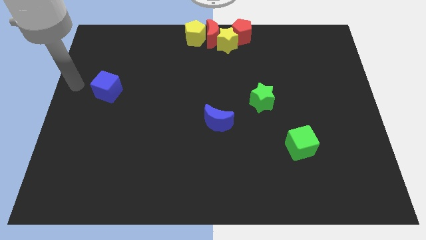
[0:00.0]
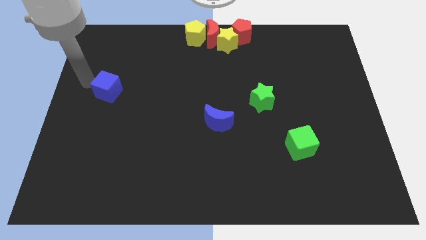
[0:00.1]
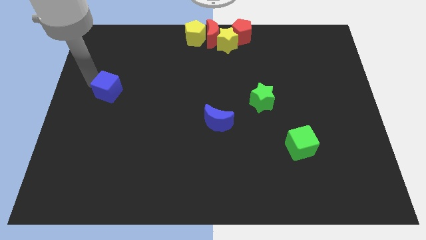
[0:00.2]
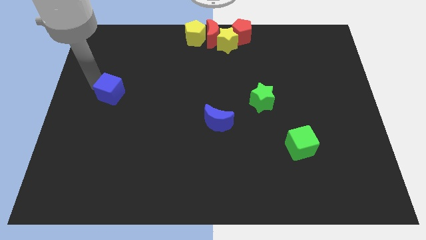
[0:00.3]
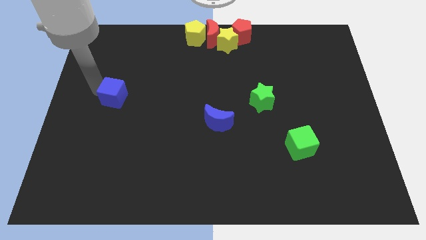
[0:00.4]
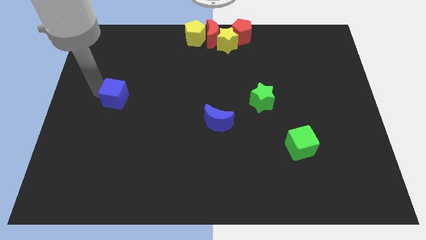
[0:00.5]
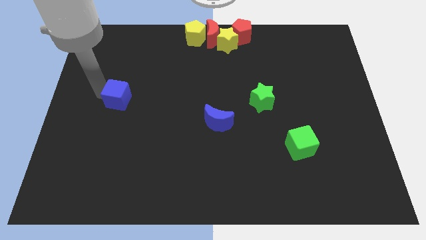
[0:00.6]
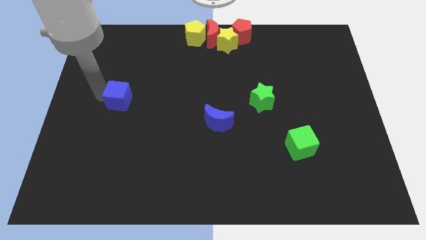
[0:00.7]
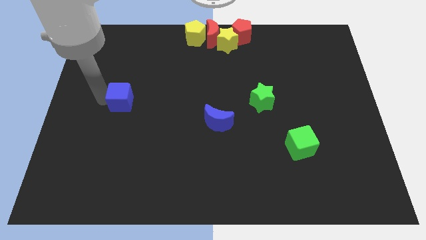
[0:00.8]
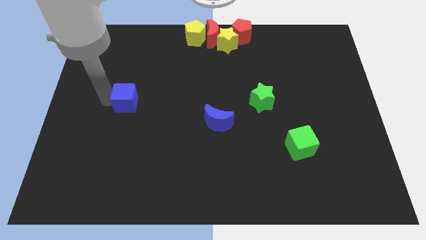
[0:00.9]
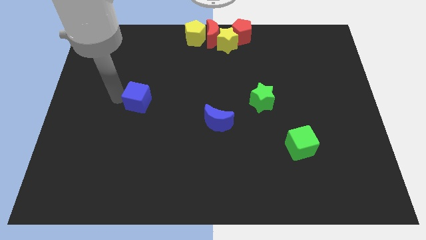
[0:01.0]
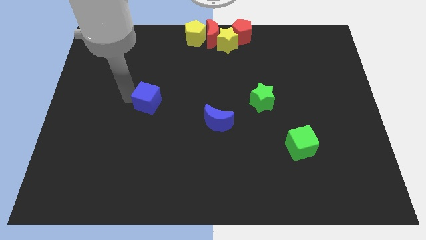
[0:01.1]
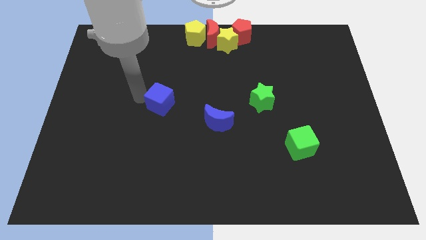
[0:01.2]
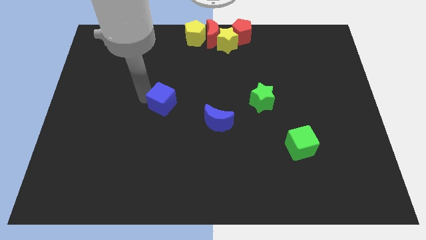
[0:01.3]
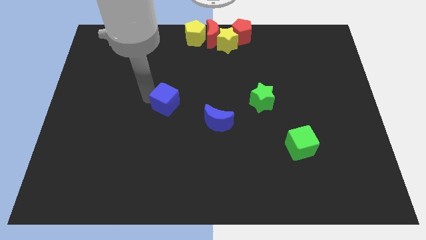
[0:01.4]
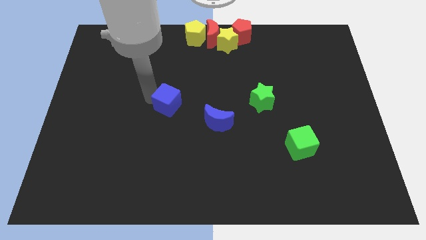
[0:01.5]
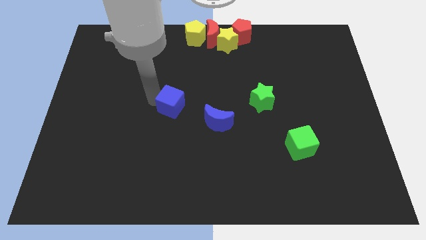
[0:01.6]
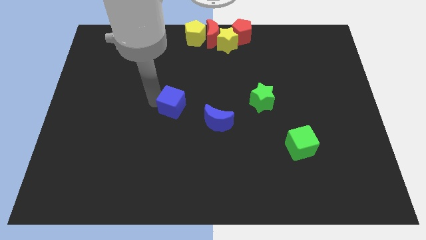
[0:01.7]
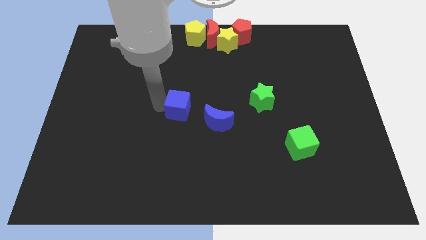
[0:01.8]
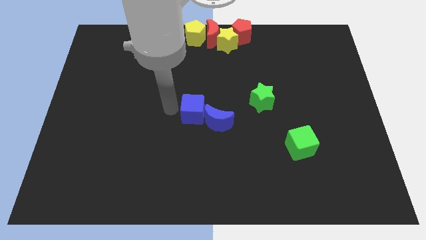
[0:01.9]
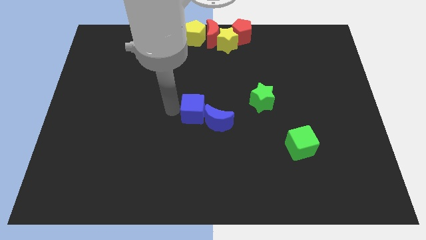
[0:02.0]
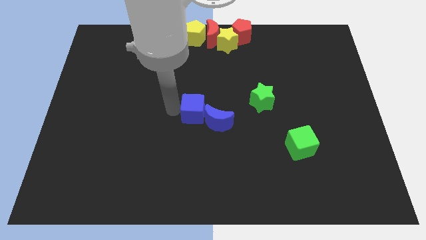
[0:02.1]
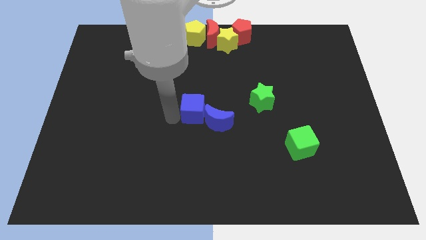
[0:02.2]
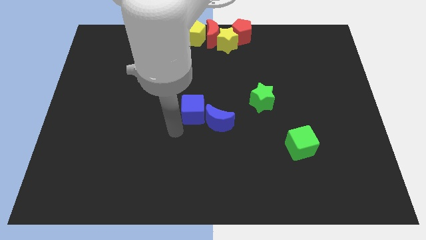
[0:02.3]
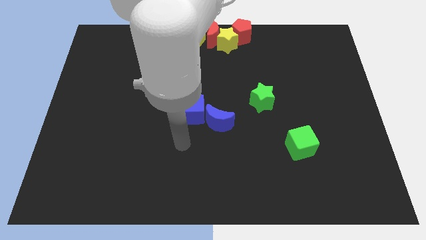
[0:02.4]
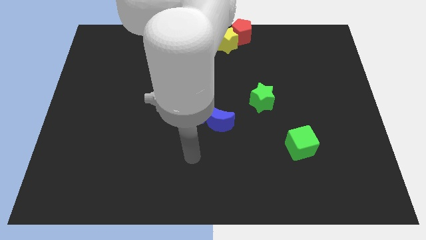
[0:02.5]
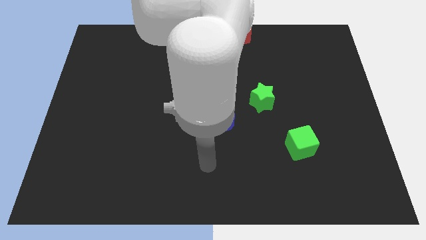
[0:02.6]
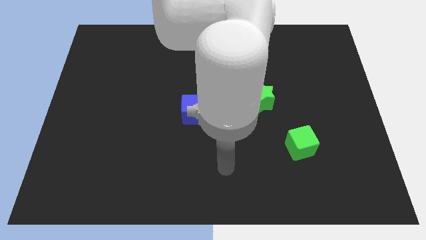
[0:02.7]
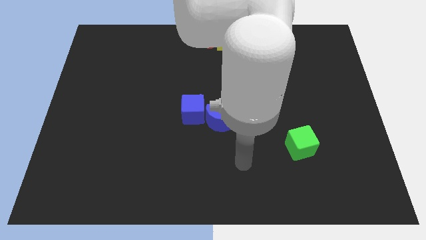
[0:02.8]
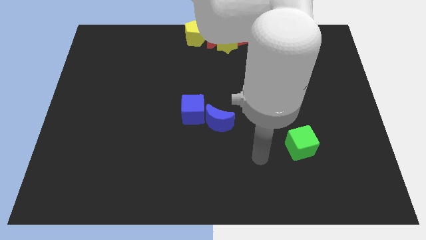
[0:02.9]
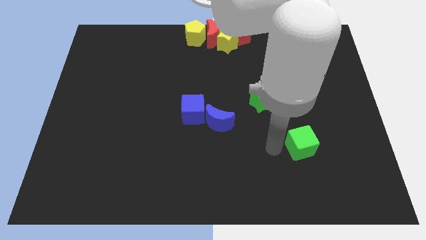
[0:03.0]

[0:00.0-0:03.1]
move blue cube close to blue moon

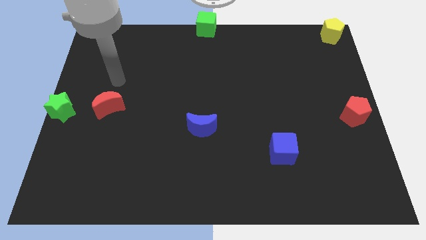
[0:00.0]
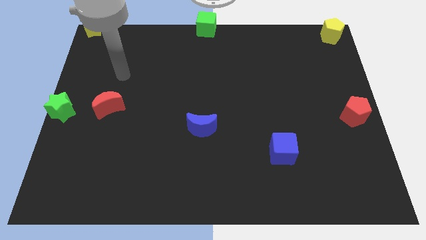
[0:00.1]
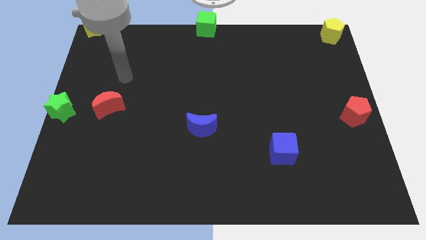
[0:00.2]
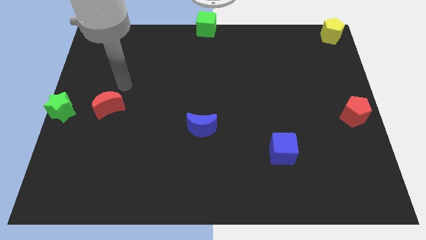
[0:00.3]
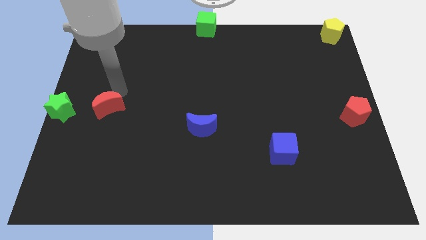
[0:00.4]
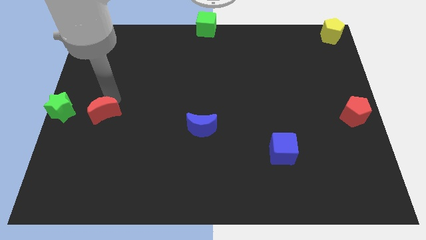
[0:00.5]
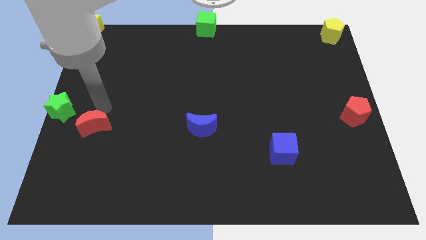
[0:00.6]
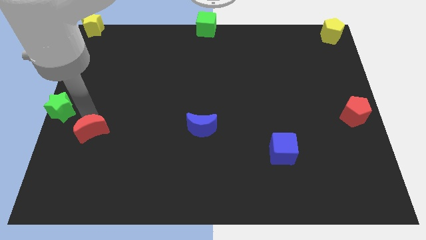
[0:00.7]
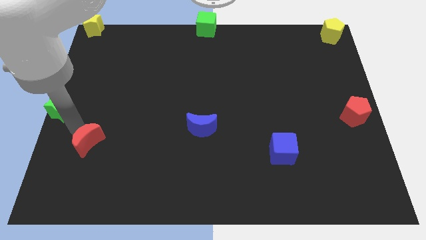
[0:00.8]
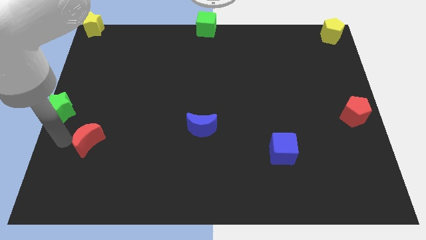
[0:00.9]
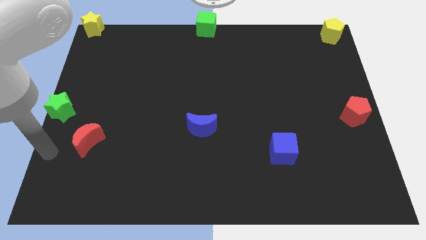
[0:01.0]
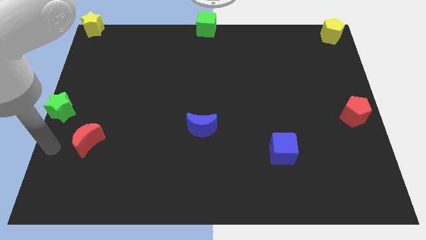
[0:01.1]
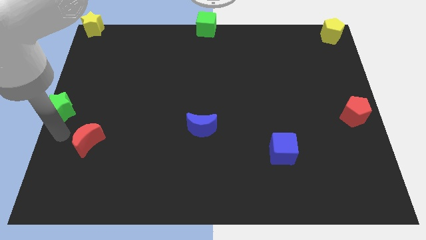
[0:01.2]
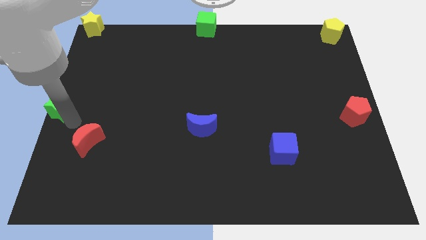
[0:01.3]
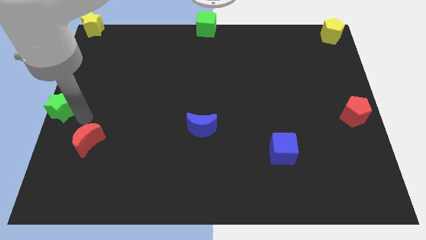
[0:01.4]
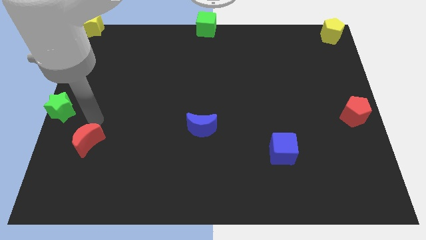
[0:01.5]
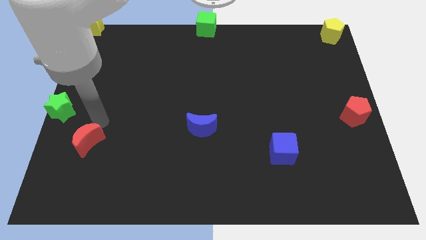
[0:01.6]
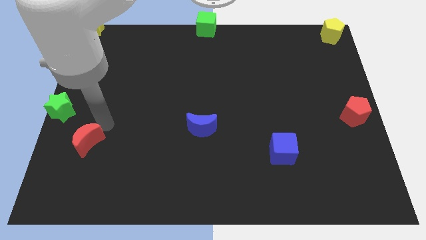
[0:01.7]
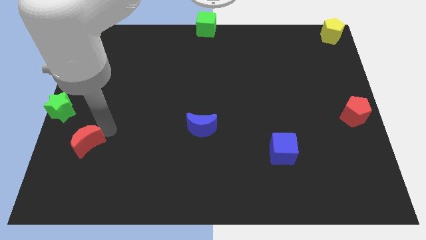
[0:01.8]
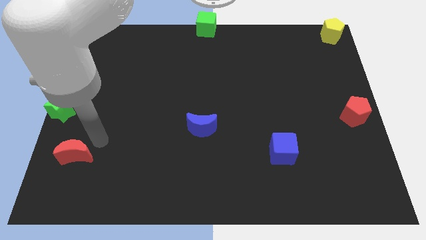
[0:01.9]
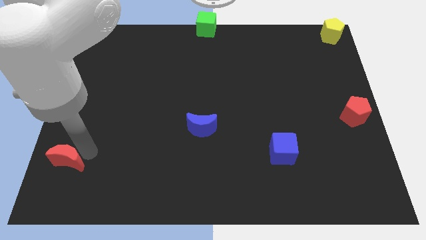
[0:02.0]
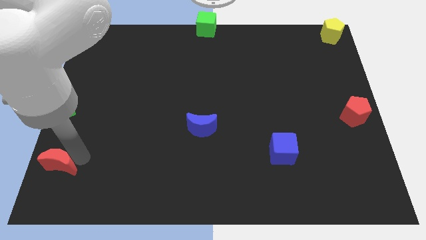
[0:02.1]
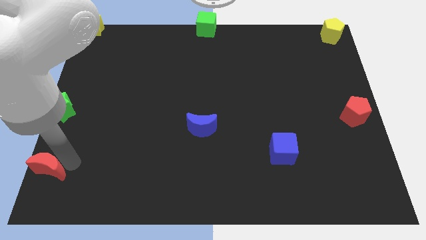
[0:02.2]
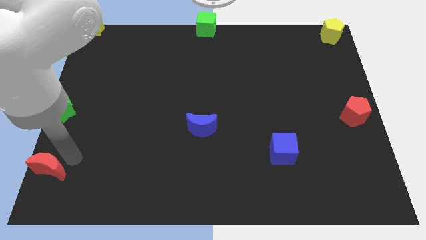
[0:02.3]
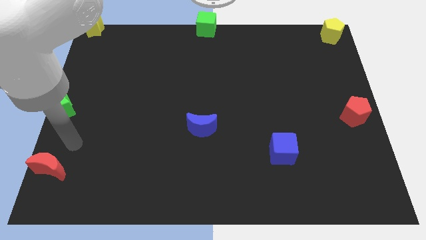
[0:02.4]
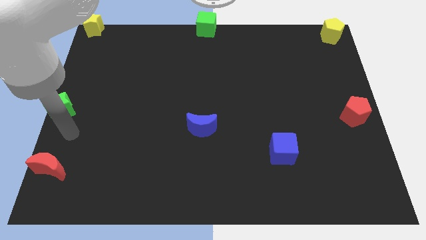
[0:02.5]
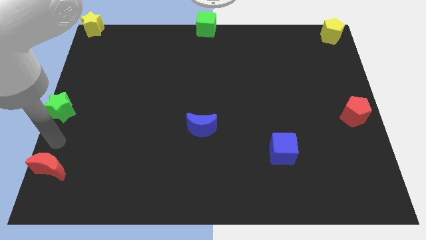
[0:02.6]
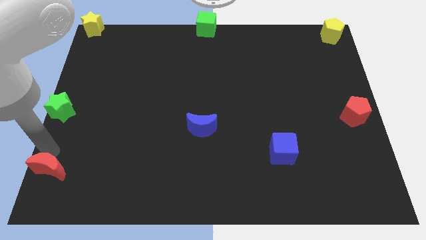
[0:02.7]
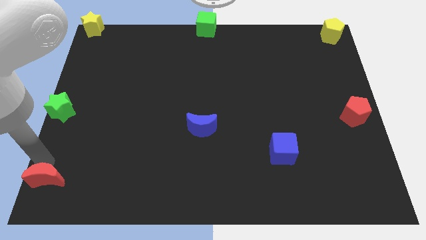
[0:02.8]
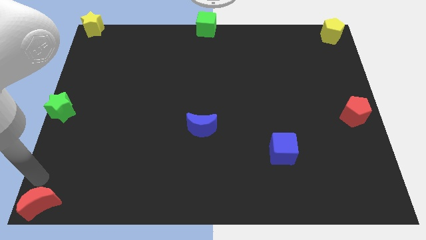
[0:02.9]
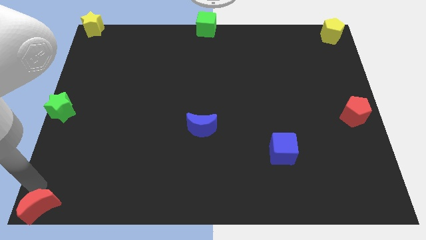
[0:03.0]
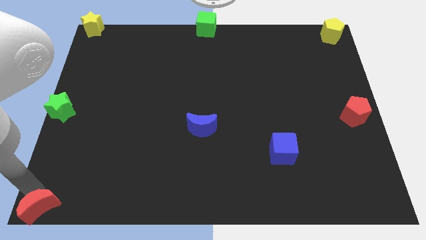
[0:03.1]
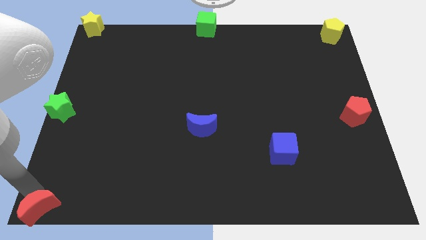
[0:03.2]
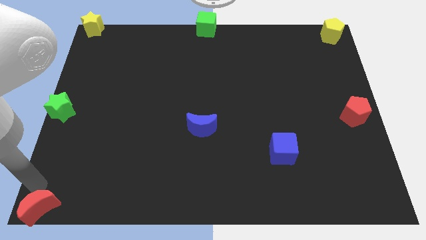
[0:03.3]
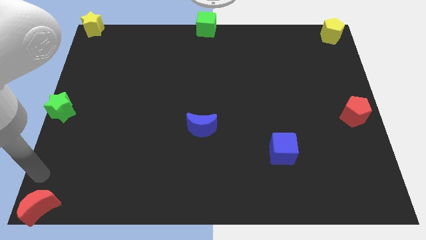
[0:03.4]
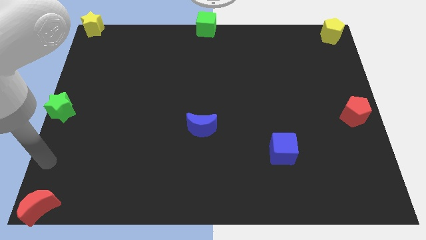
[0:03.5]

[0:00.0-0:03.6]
place the red moon at the bottom left corner of the board

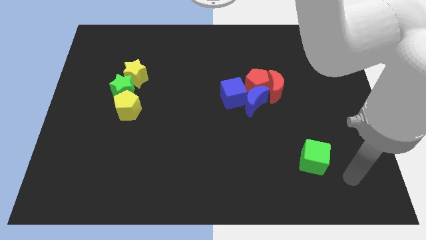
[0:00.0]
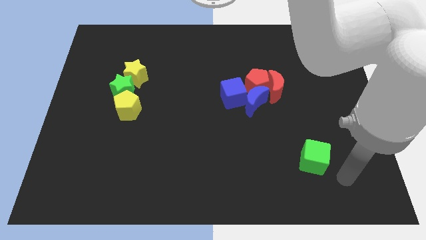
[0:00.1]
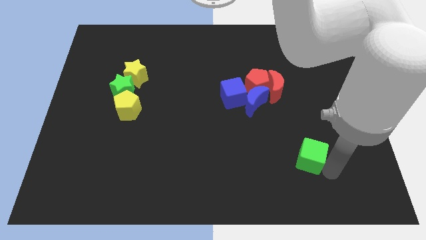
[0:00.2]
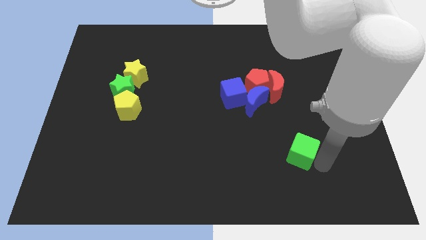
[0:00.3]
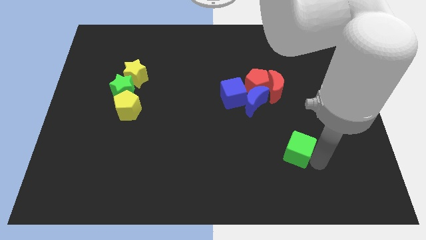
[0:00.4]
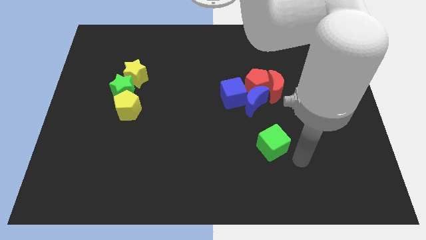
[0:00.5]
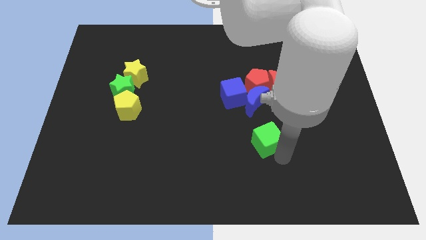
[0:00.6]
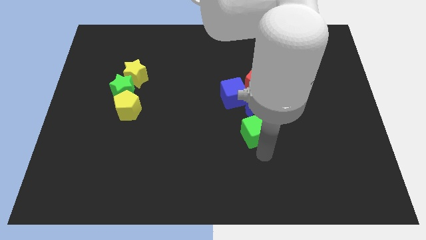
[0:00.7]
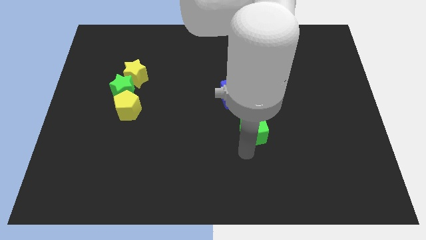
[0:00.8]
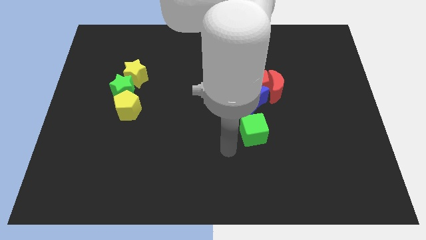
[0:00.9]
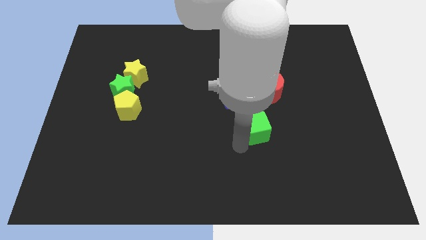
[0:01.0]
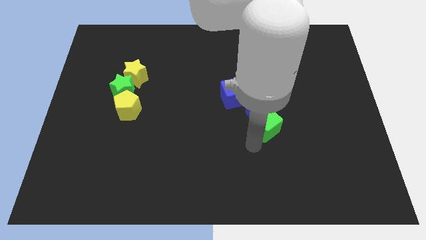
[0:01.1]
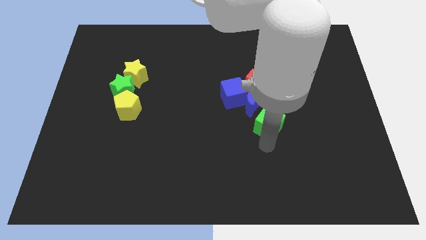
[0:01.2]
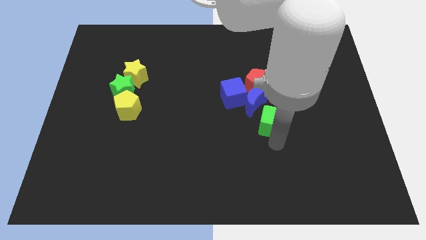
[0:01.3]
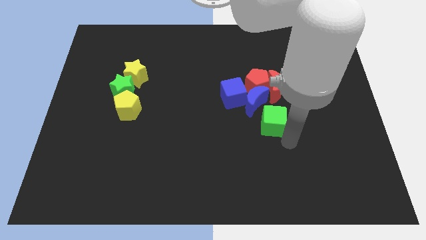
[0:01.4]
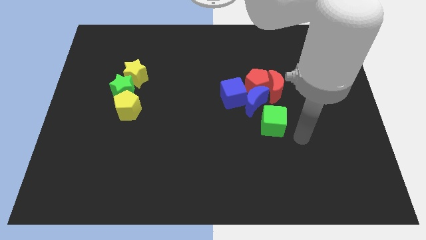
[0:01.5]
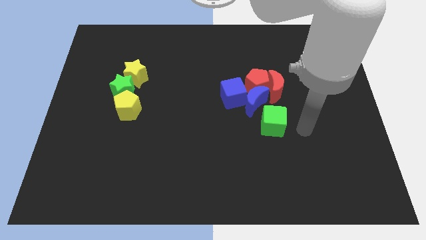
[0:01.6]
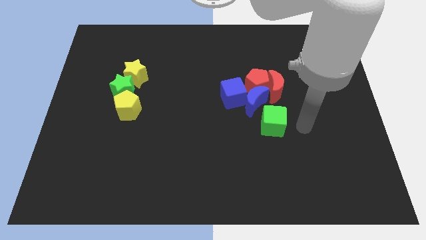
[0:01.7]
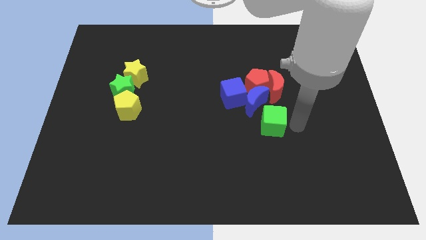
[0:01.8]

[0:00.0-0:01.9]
place the green cube close to the blue moon

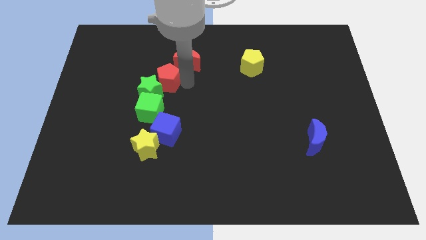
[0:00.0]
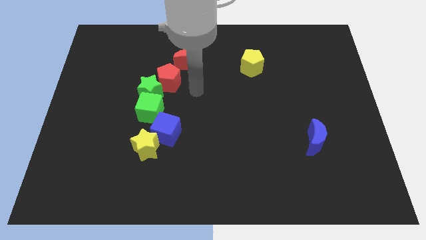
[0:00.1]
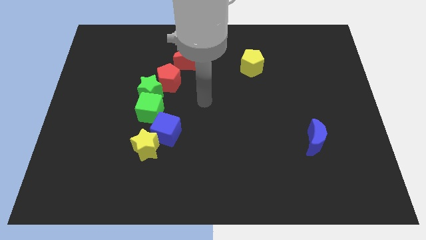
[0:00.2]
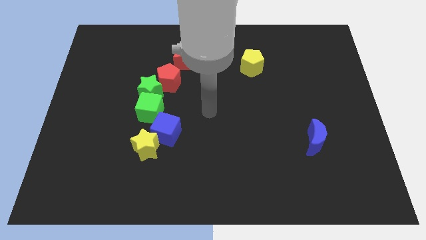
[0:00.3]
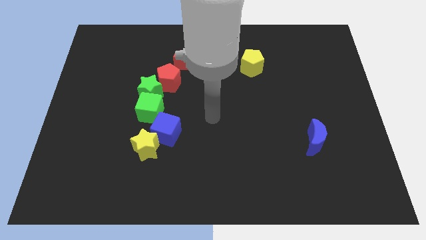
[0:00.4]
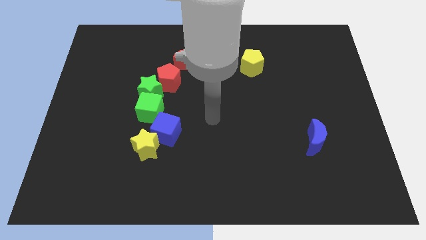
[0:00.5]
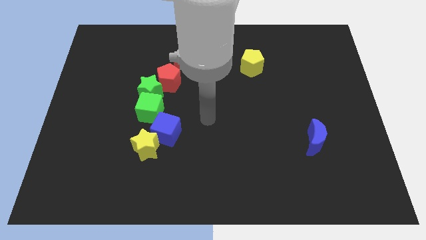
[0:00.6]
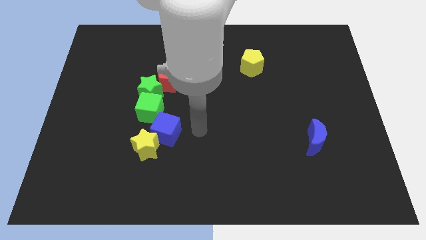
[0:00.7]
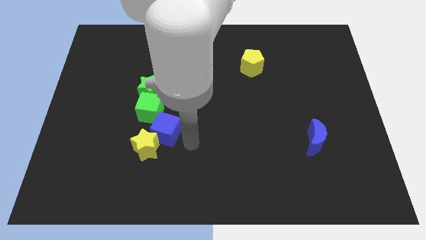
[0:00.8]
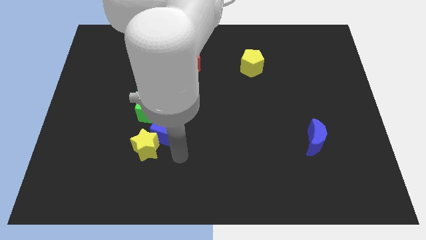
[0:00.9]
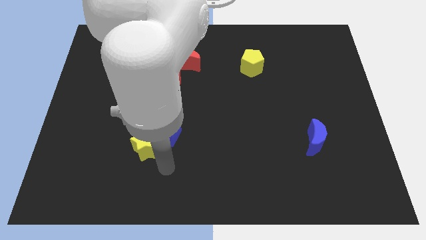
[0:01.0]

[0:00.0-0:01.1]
move your hand to the bottom side of the blue cube
